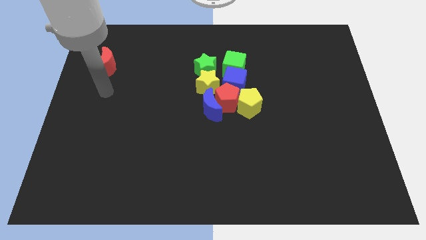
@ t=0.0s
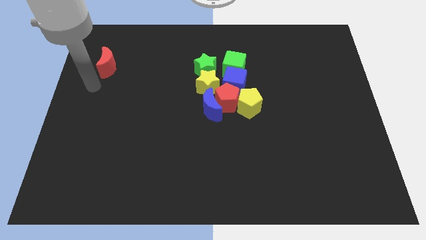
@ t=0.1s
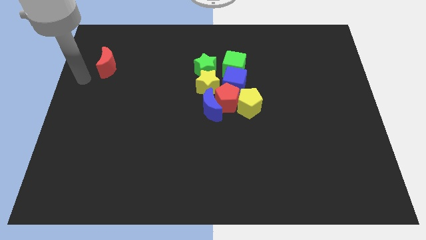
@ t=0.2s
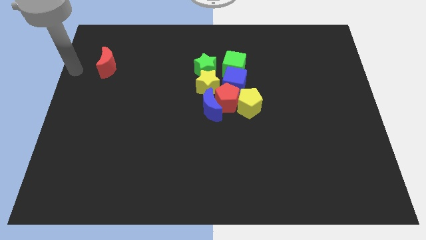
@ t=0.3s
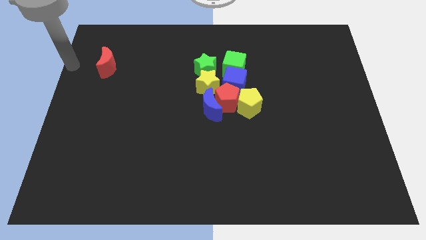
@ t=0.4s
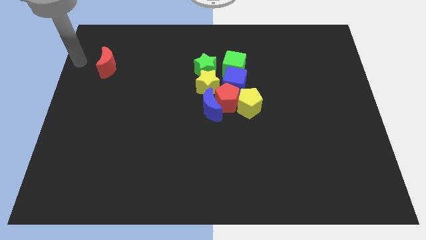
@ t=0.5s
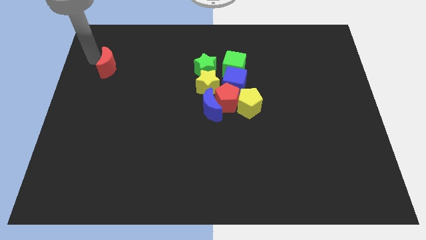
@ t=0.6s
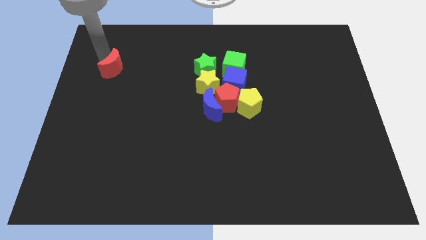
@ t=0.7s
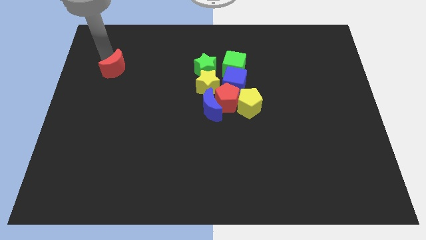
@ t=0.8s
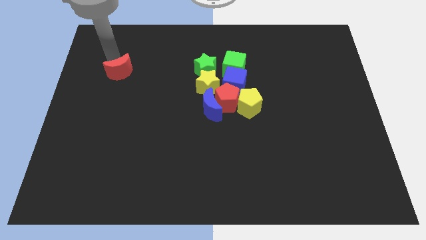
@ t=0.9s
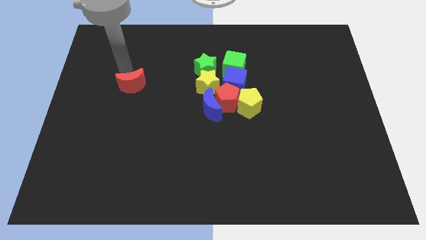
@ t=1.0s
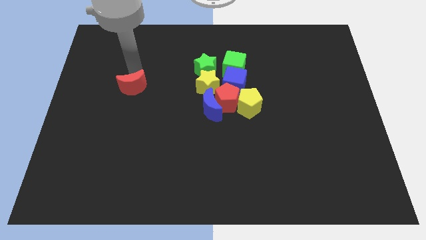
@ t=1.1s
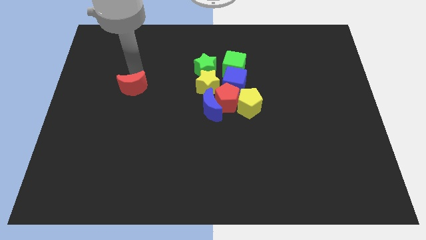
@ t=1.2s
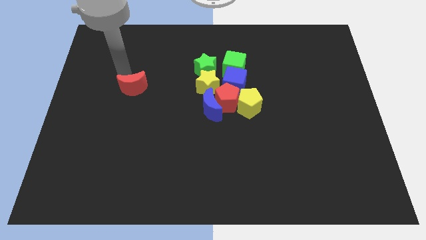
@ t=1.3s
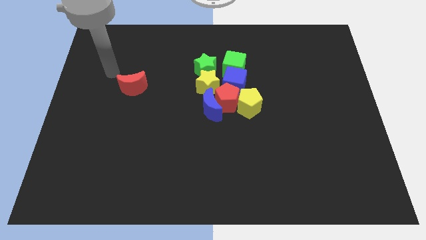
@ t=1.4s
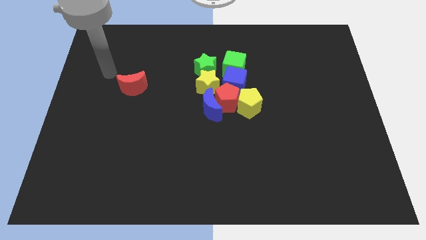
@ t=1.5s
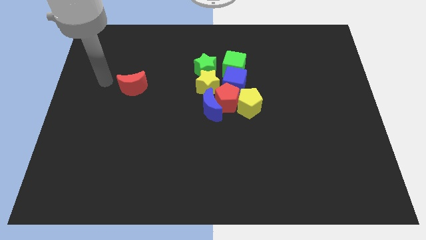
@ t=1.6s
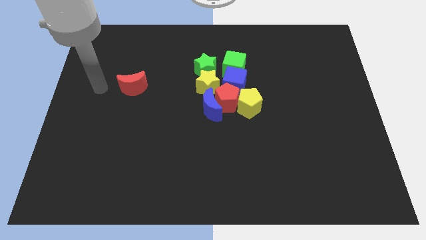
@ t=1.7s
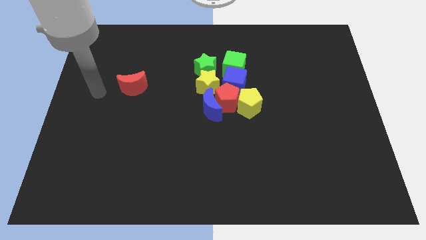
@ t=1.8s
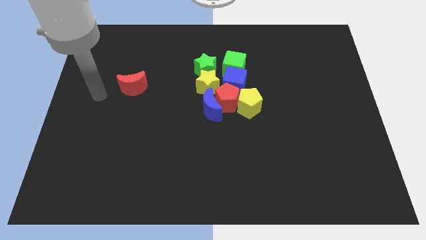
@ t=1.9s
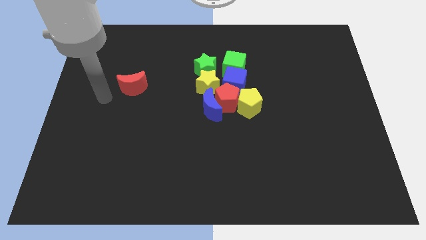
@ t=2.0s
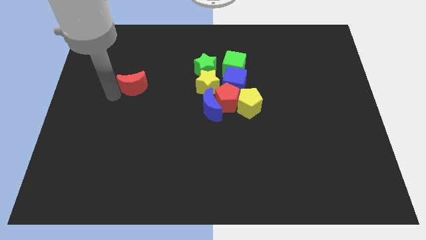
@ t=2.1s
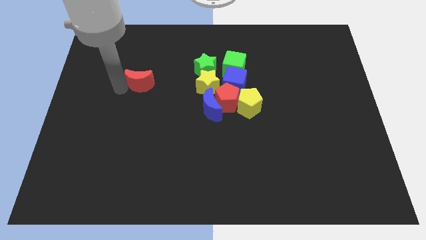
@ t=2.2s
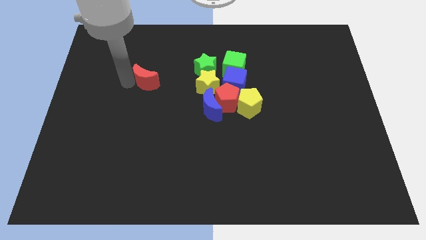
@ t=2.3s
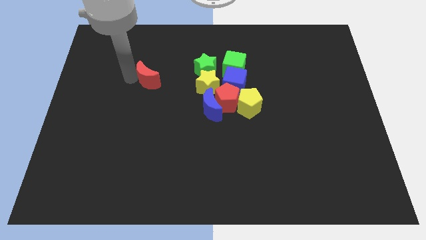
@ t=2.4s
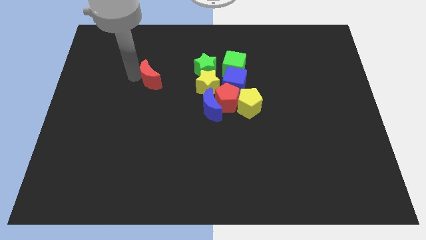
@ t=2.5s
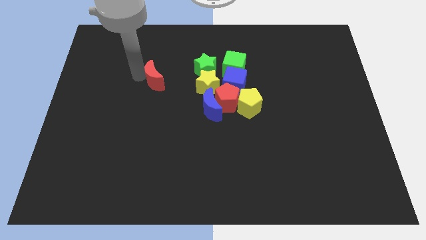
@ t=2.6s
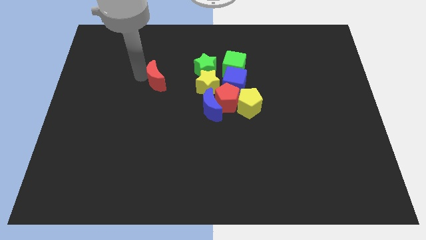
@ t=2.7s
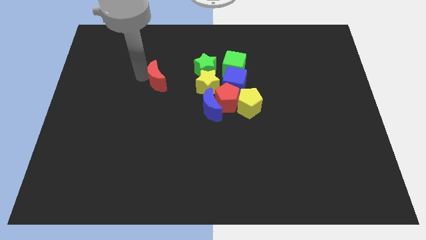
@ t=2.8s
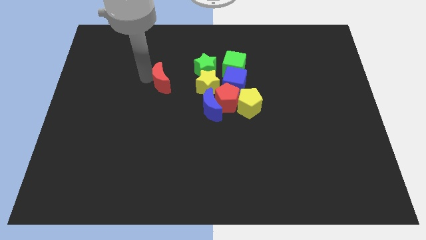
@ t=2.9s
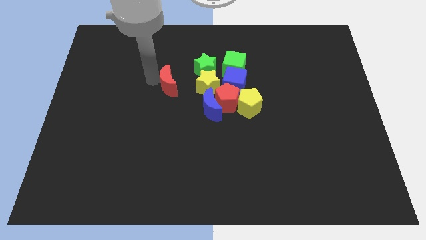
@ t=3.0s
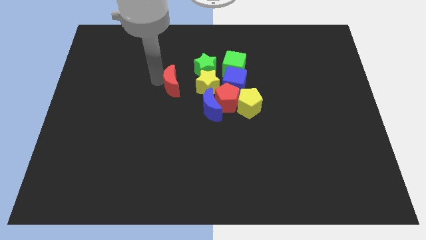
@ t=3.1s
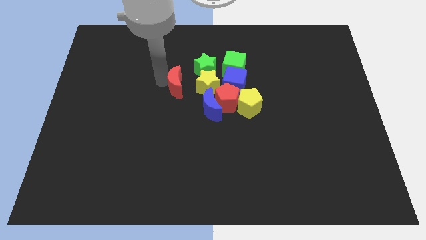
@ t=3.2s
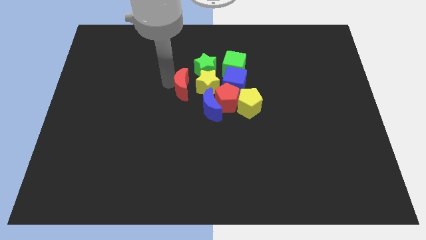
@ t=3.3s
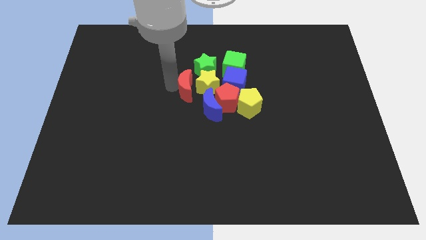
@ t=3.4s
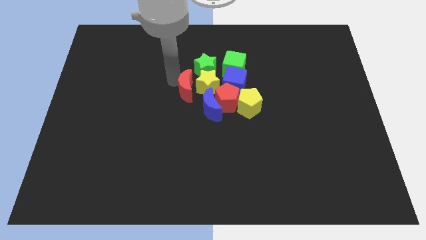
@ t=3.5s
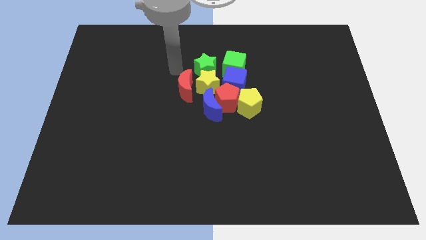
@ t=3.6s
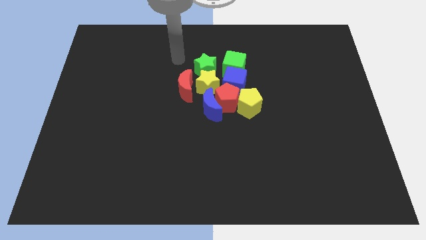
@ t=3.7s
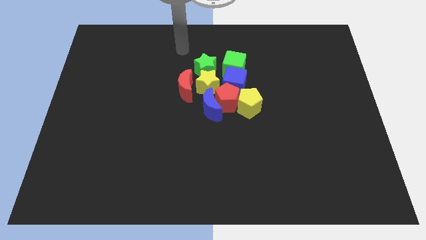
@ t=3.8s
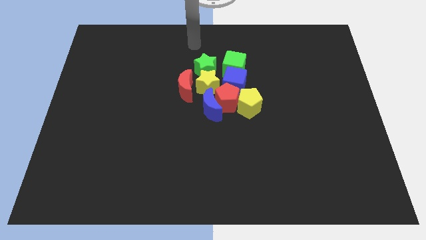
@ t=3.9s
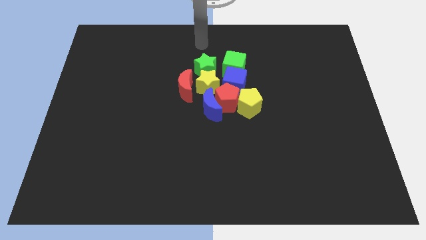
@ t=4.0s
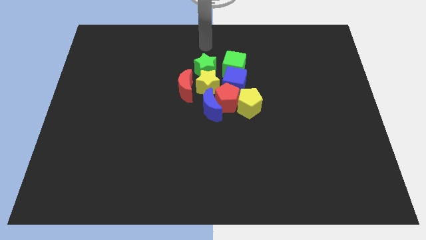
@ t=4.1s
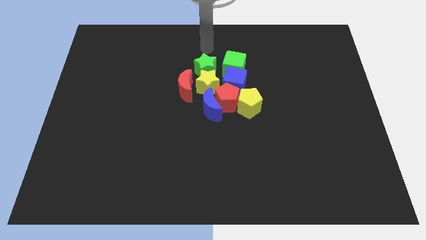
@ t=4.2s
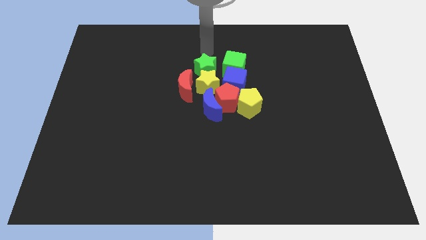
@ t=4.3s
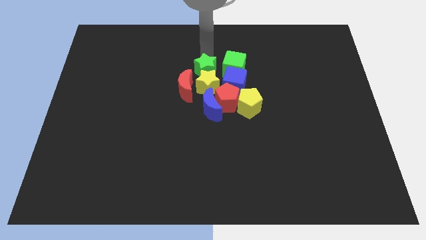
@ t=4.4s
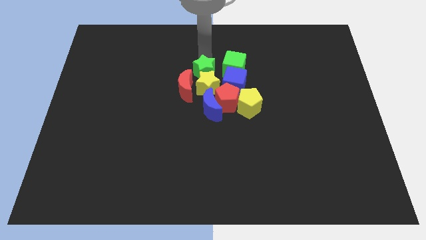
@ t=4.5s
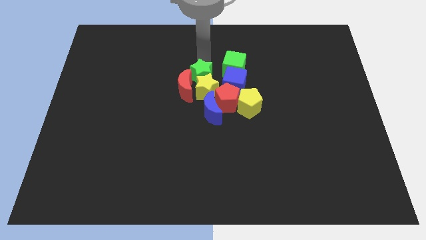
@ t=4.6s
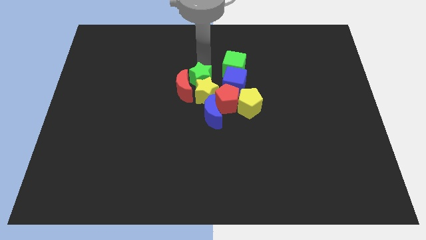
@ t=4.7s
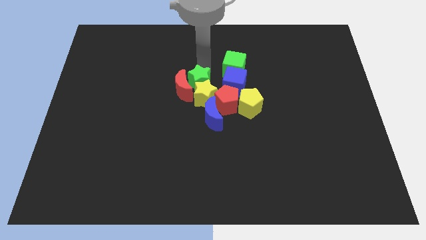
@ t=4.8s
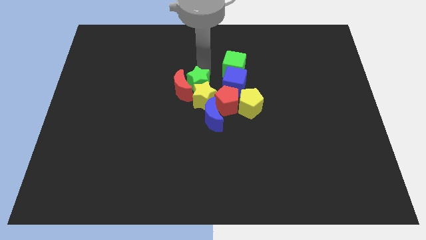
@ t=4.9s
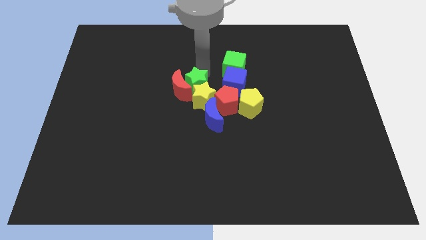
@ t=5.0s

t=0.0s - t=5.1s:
move red moon into the group of blocks

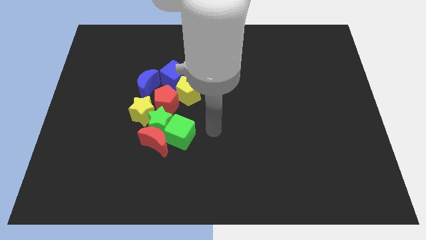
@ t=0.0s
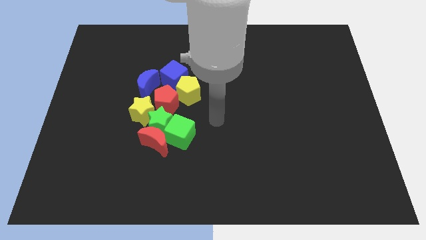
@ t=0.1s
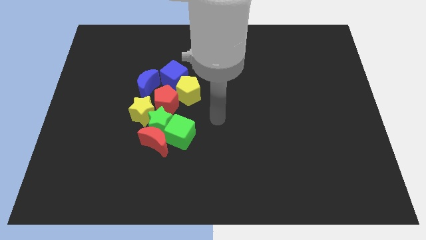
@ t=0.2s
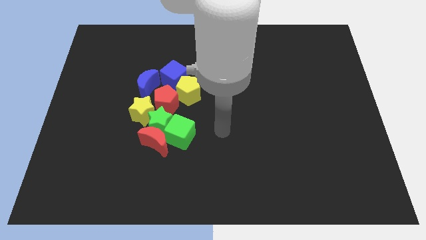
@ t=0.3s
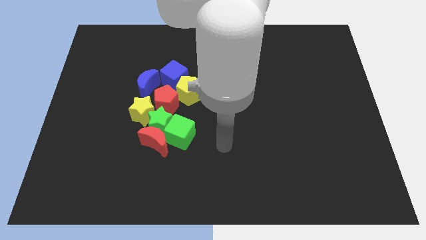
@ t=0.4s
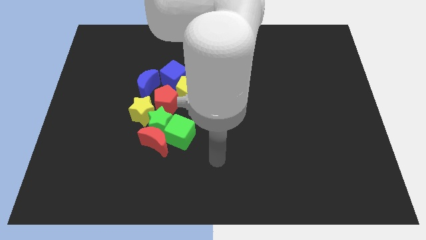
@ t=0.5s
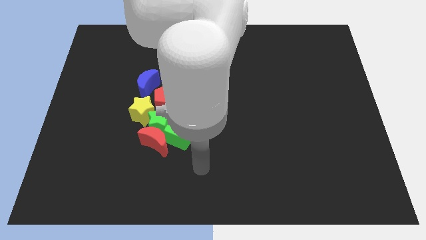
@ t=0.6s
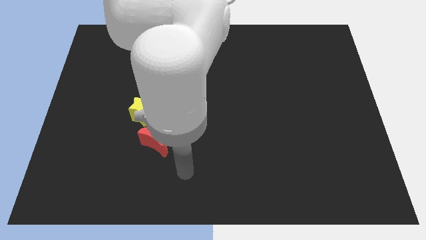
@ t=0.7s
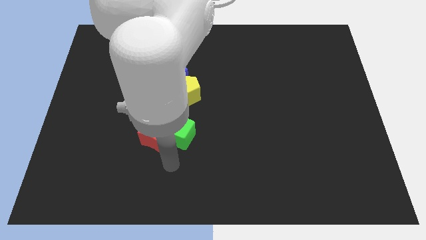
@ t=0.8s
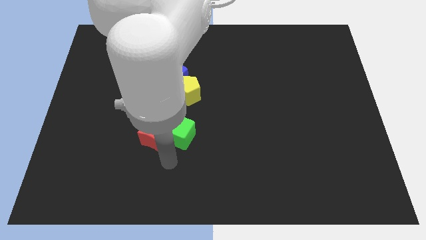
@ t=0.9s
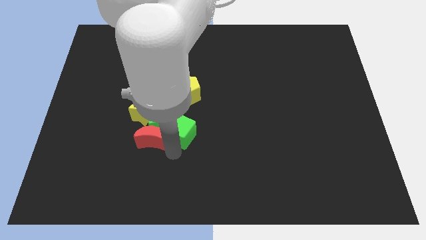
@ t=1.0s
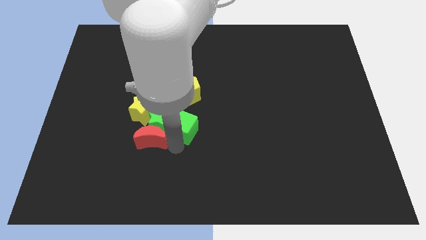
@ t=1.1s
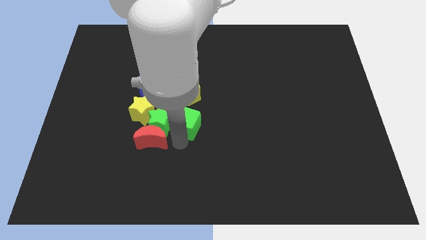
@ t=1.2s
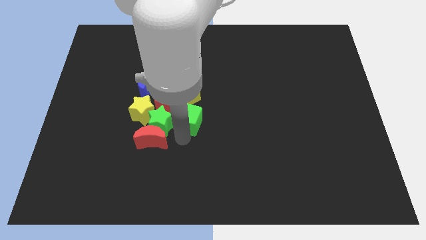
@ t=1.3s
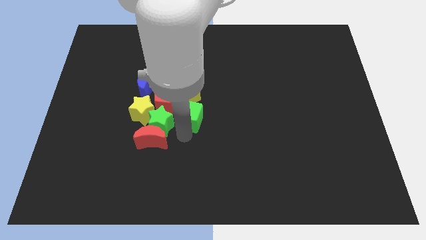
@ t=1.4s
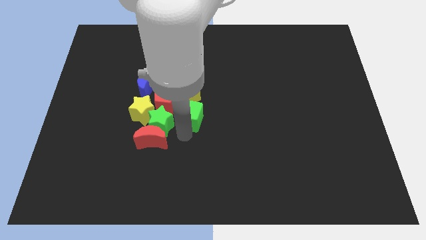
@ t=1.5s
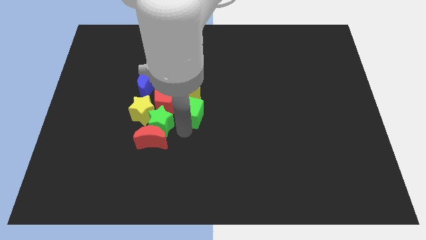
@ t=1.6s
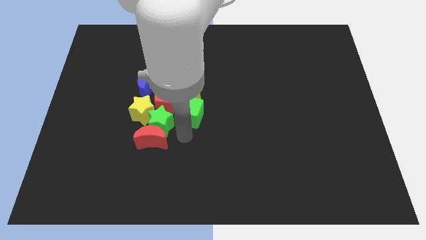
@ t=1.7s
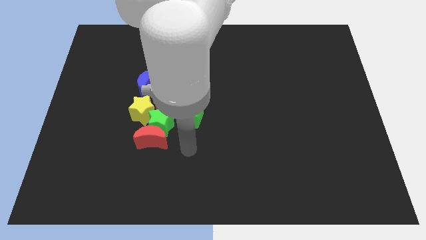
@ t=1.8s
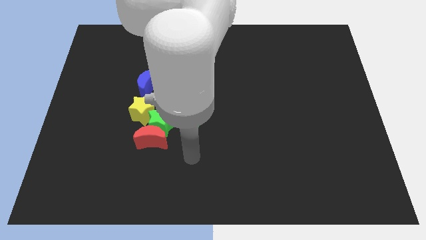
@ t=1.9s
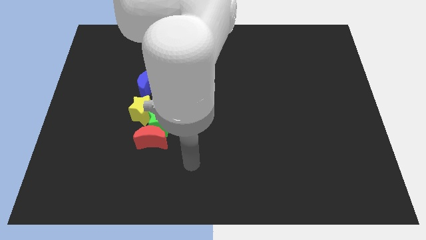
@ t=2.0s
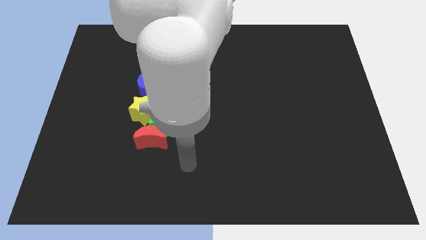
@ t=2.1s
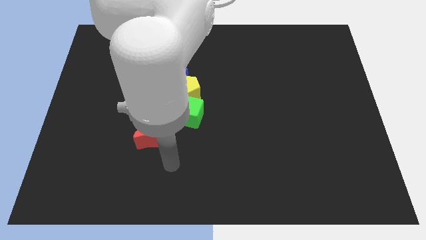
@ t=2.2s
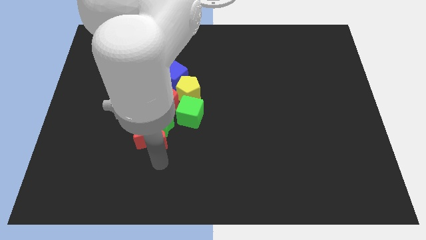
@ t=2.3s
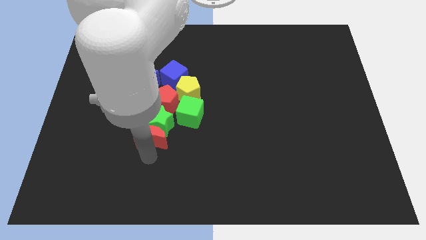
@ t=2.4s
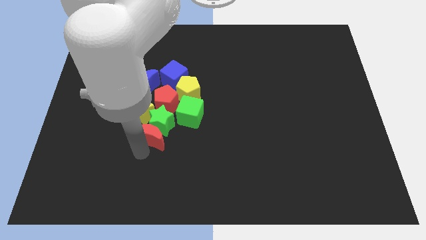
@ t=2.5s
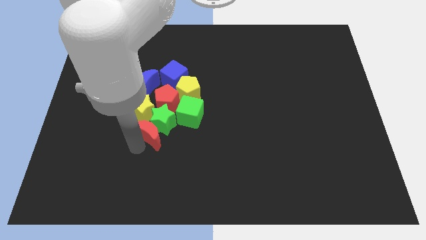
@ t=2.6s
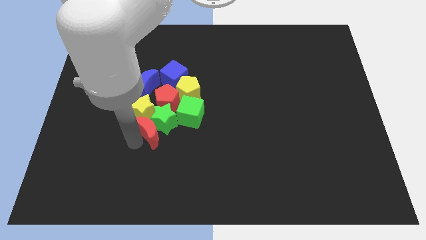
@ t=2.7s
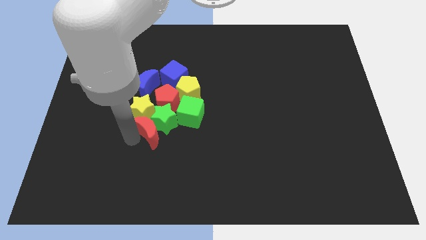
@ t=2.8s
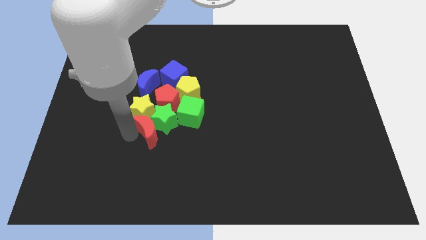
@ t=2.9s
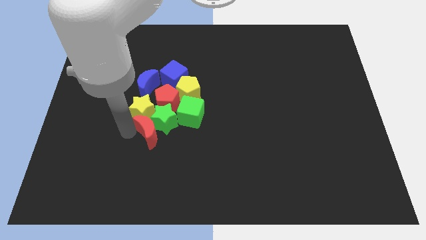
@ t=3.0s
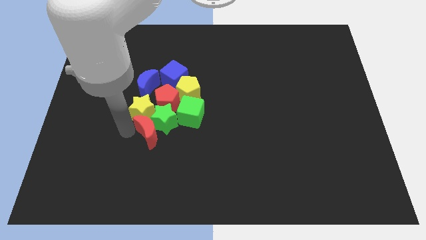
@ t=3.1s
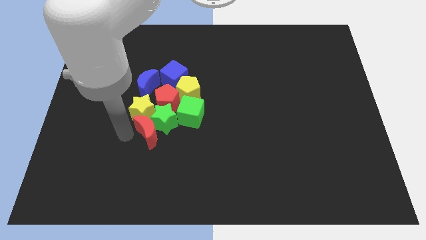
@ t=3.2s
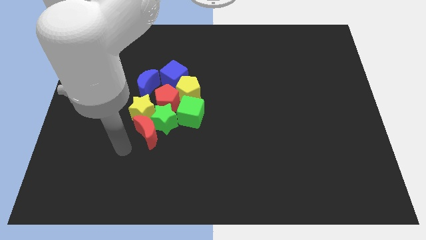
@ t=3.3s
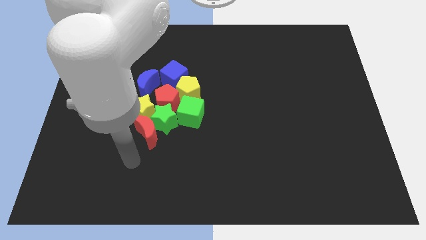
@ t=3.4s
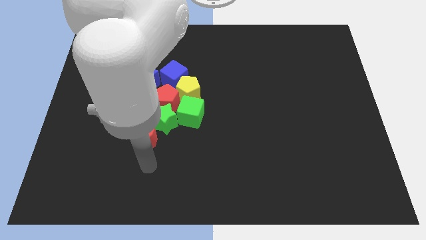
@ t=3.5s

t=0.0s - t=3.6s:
move the green cube slightly upwards

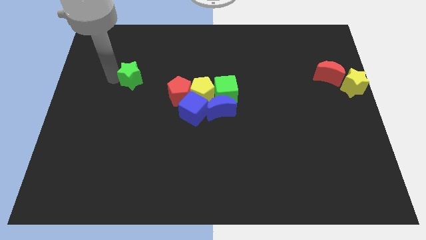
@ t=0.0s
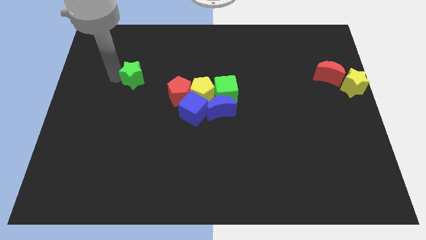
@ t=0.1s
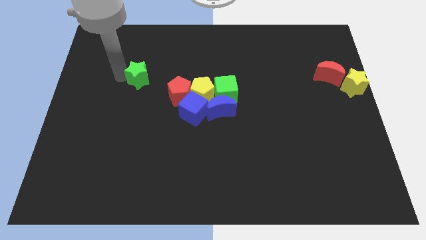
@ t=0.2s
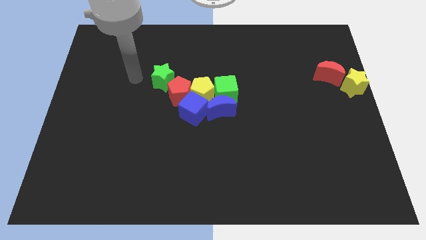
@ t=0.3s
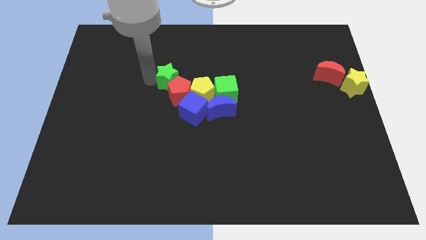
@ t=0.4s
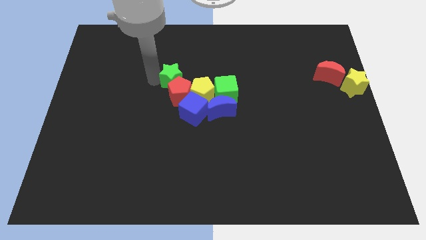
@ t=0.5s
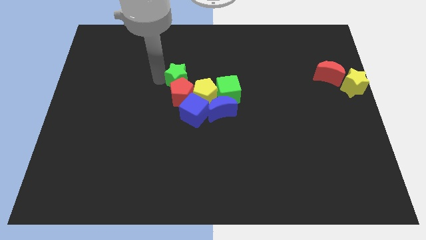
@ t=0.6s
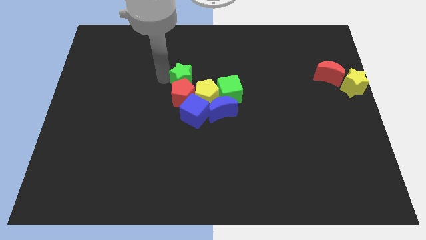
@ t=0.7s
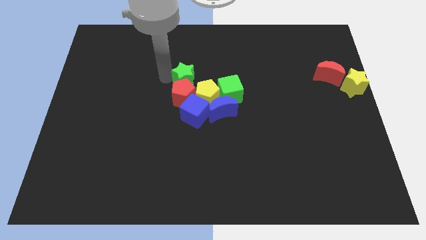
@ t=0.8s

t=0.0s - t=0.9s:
place a green star on top of the red pentagon
